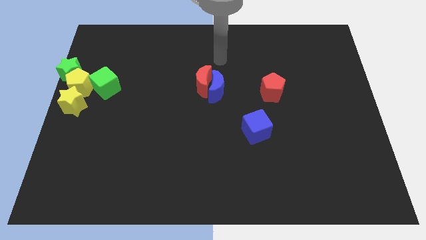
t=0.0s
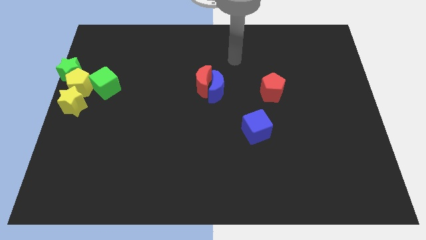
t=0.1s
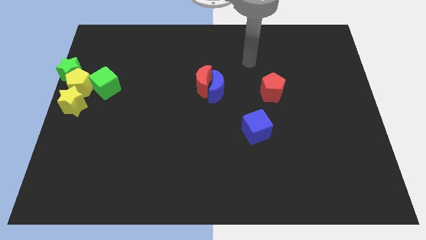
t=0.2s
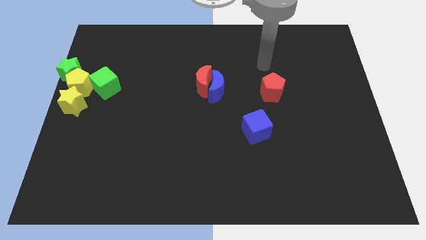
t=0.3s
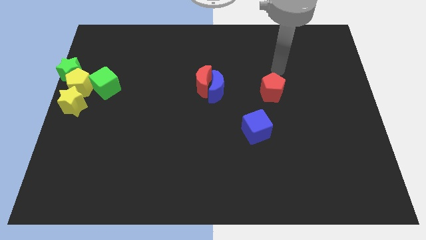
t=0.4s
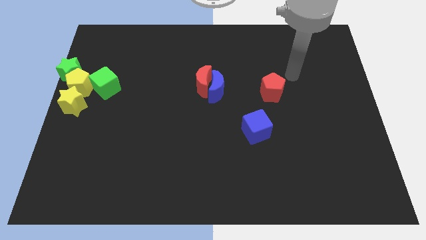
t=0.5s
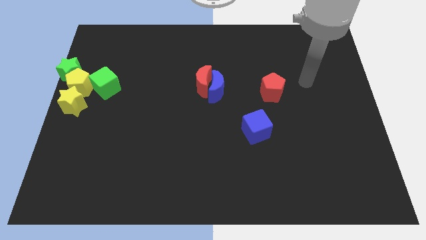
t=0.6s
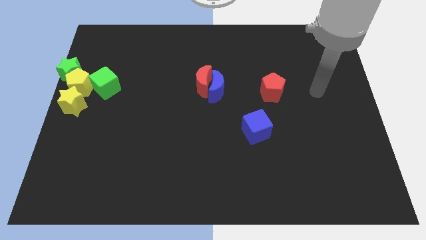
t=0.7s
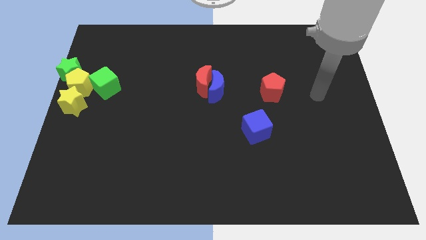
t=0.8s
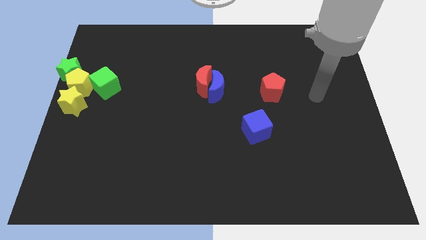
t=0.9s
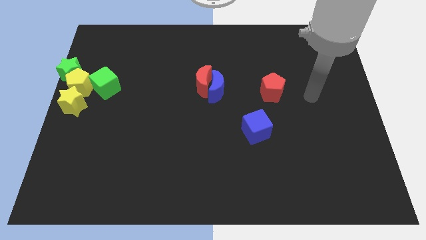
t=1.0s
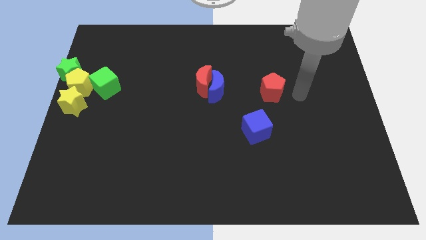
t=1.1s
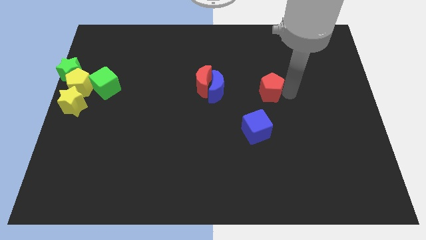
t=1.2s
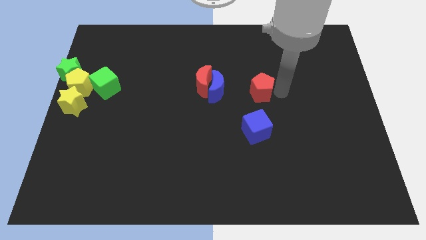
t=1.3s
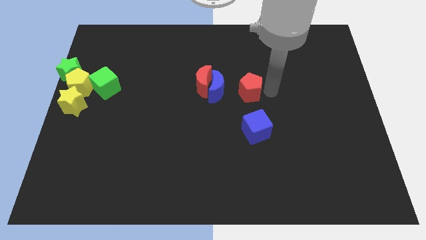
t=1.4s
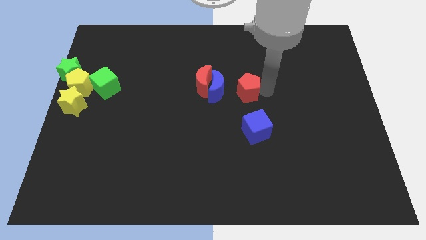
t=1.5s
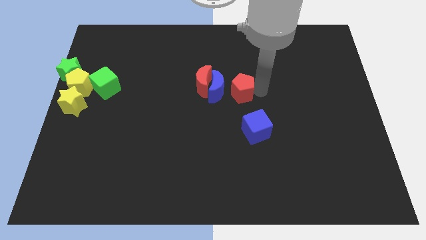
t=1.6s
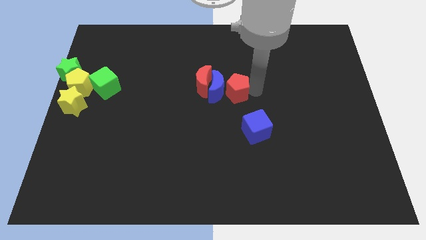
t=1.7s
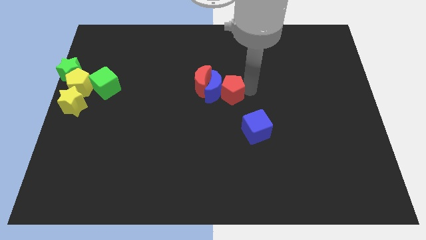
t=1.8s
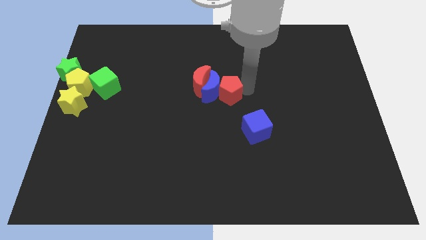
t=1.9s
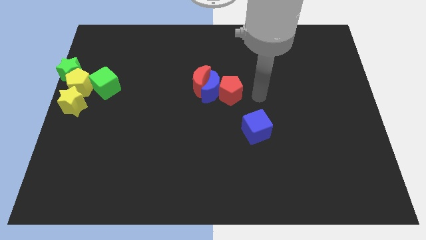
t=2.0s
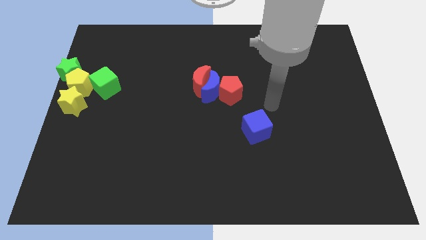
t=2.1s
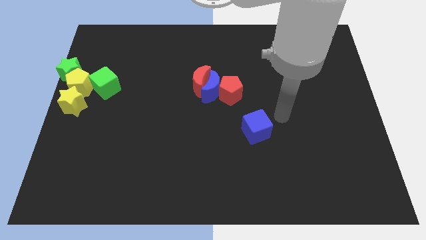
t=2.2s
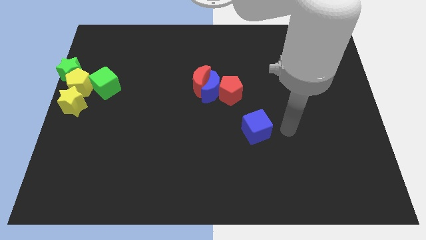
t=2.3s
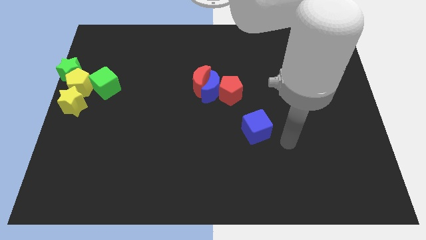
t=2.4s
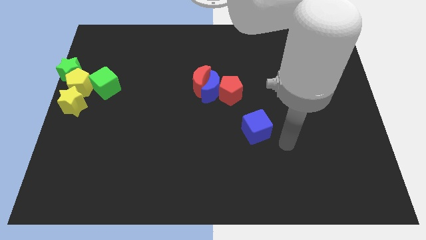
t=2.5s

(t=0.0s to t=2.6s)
move red pentagon right beside blue moon

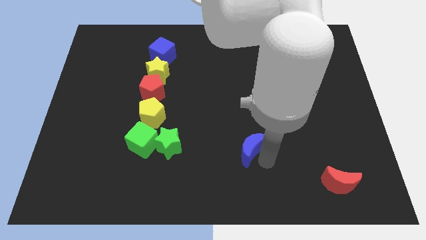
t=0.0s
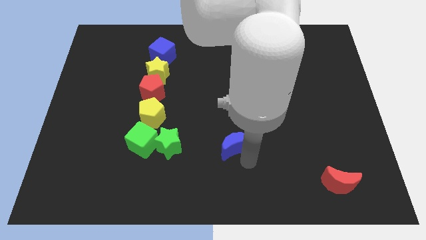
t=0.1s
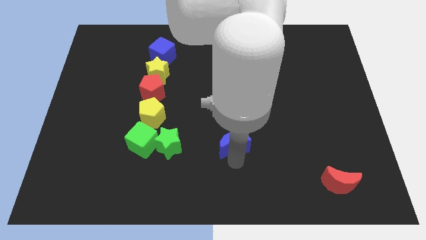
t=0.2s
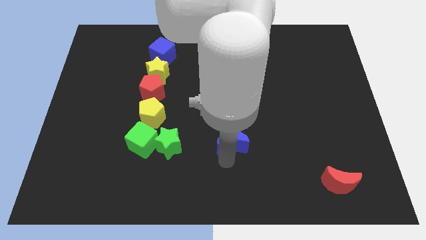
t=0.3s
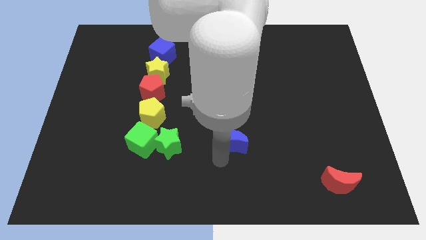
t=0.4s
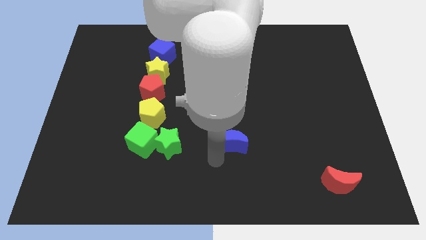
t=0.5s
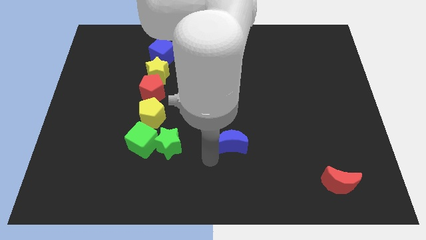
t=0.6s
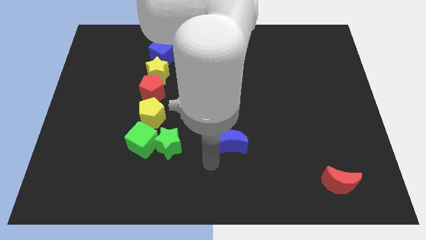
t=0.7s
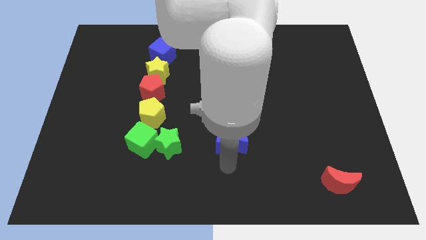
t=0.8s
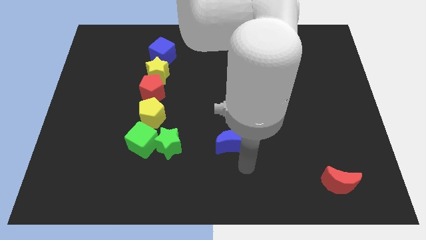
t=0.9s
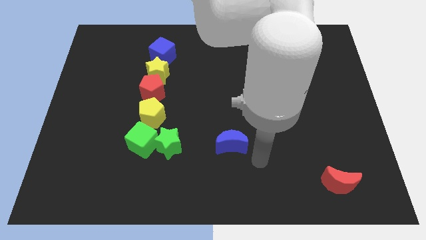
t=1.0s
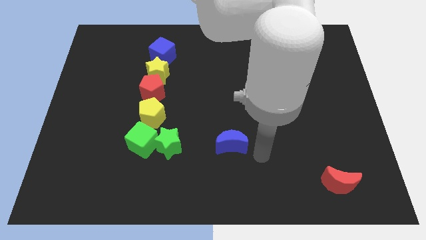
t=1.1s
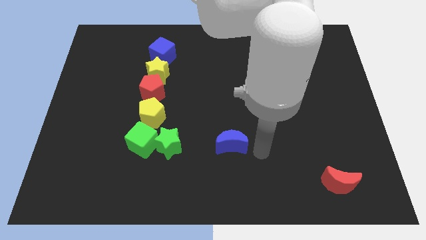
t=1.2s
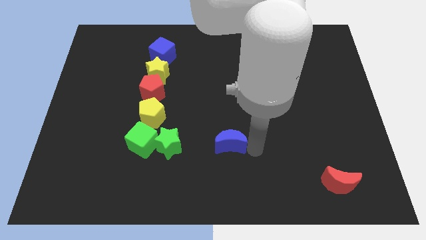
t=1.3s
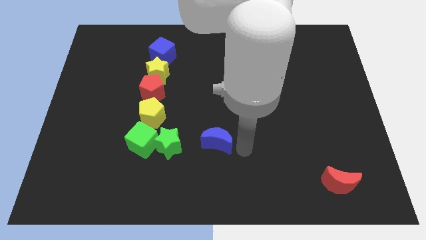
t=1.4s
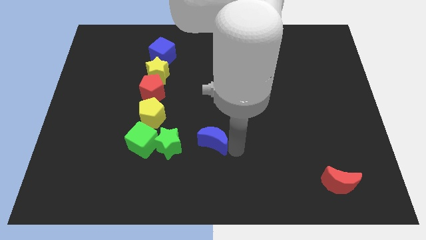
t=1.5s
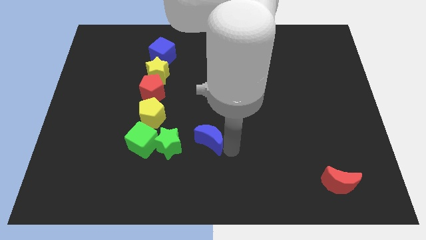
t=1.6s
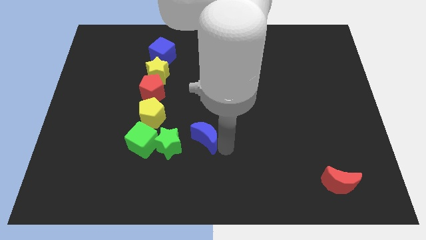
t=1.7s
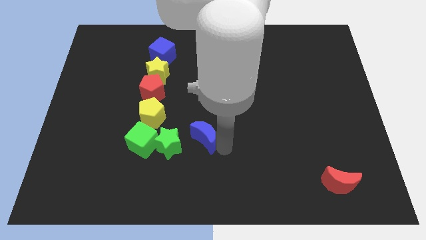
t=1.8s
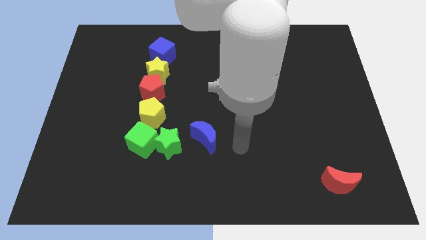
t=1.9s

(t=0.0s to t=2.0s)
move the blue moon diagonally top right to the green star

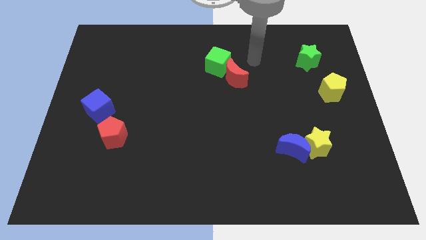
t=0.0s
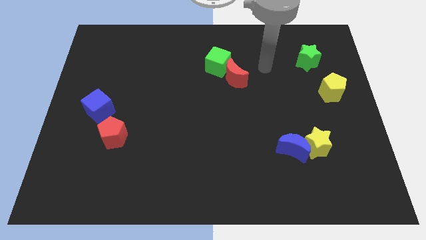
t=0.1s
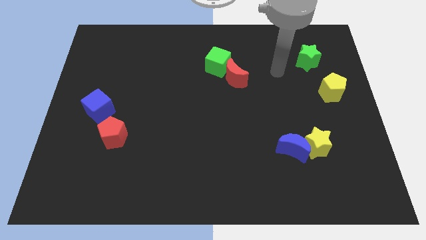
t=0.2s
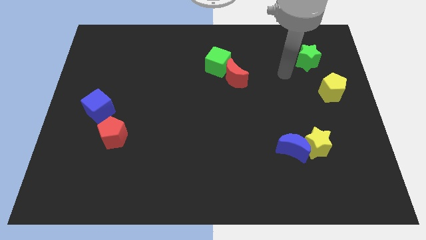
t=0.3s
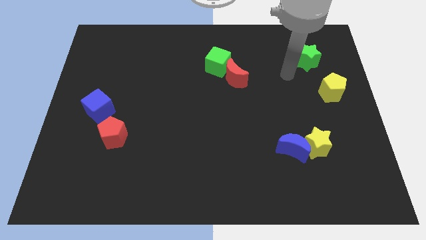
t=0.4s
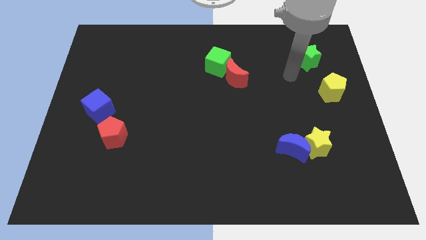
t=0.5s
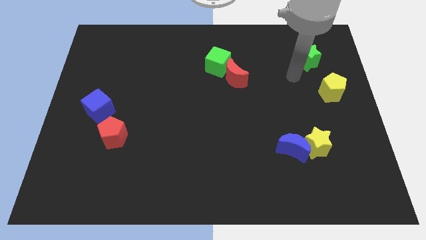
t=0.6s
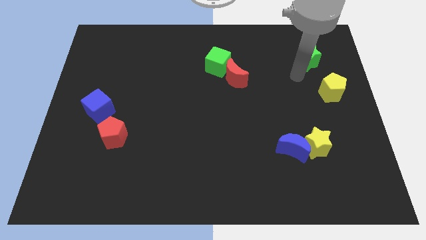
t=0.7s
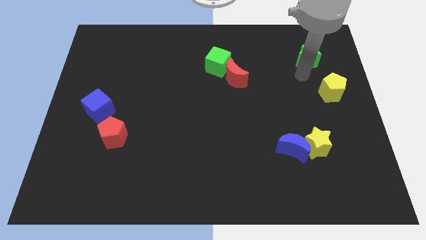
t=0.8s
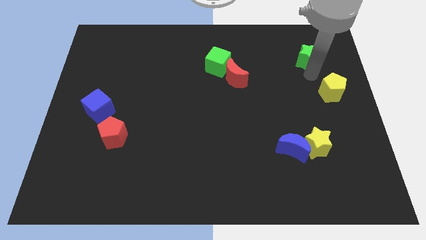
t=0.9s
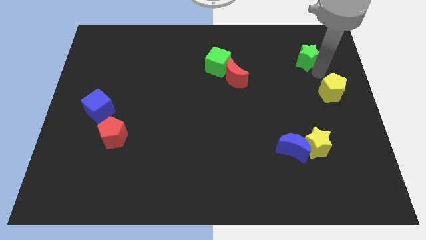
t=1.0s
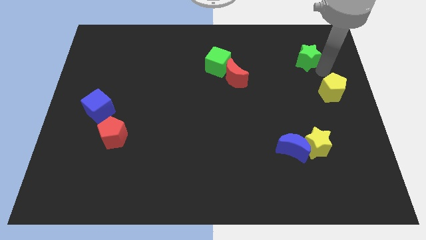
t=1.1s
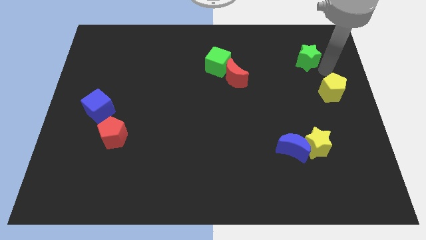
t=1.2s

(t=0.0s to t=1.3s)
go near the yellow pentagon

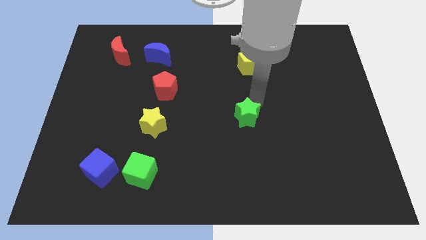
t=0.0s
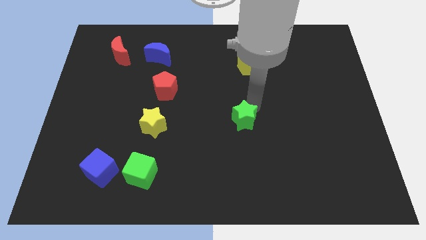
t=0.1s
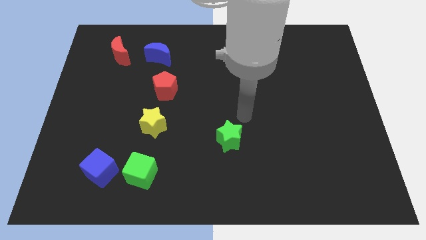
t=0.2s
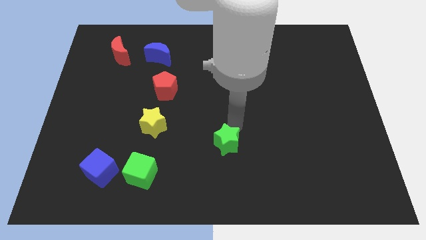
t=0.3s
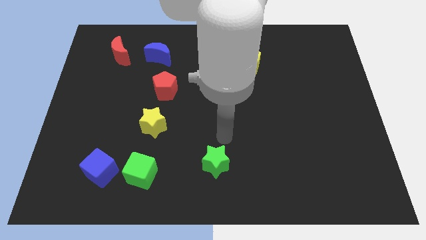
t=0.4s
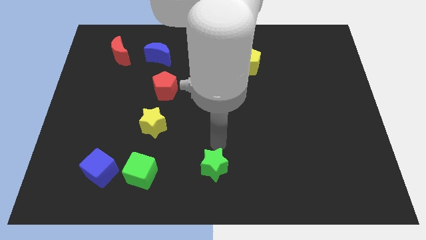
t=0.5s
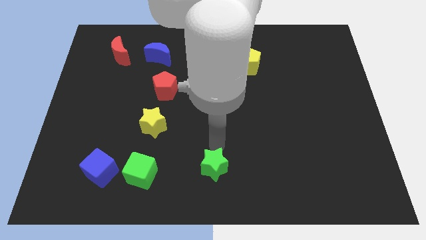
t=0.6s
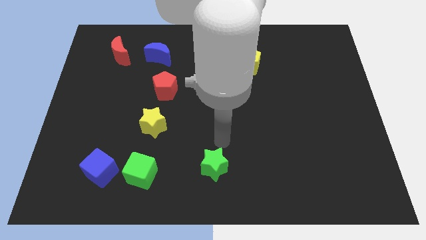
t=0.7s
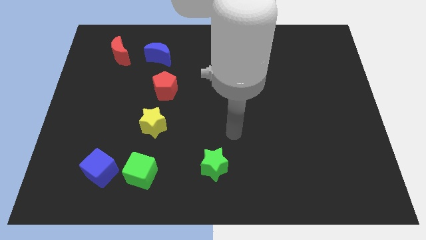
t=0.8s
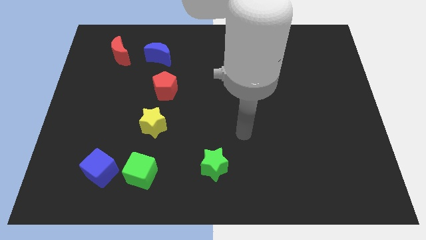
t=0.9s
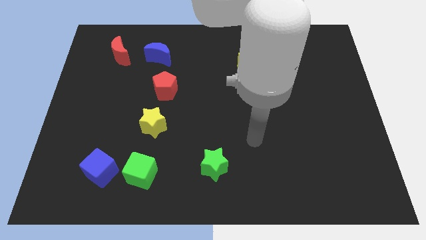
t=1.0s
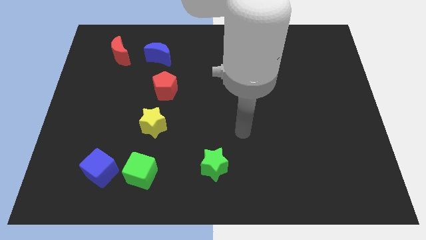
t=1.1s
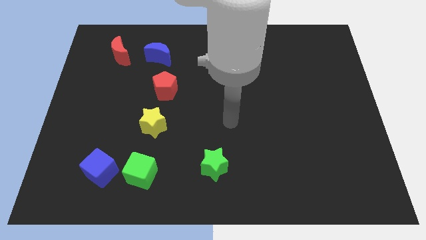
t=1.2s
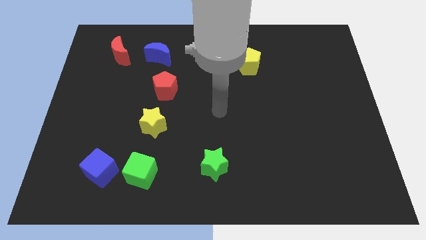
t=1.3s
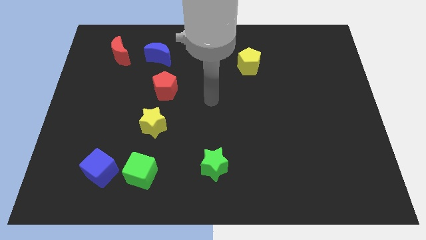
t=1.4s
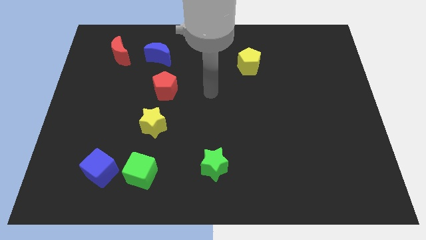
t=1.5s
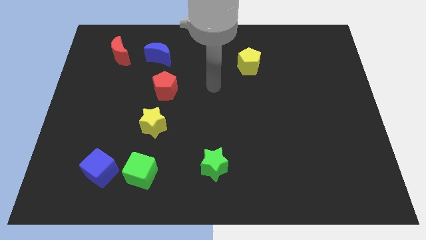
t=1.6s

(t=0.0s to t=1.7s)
drag the green star slightly down

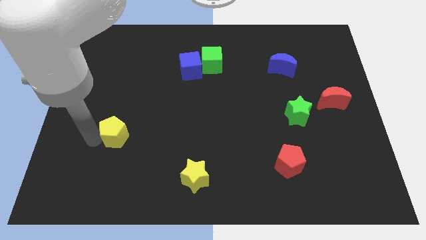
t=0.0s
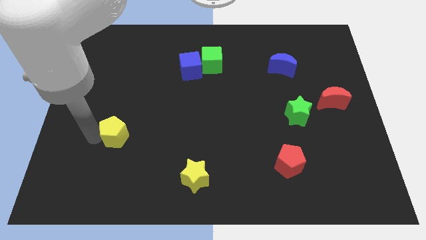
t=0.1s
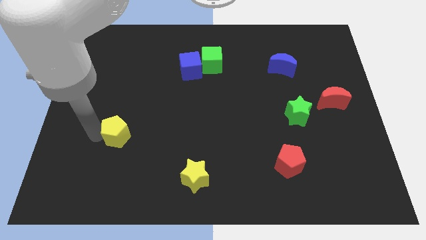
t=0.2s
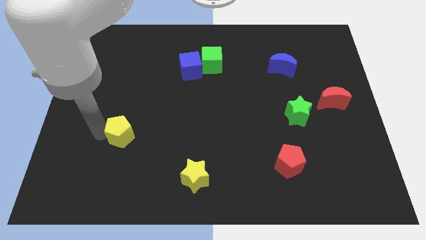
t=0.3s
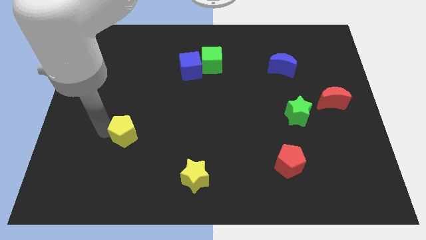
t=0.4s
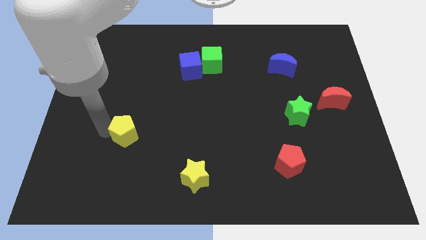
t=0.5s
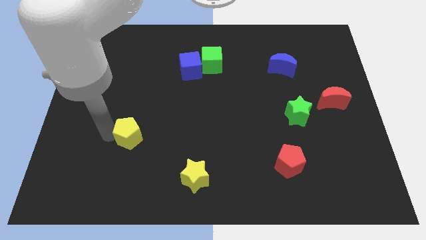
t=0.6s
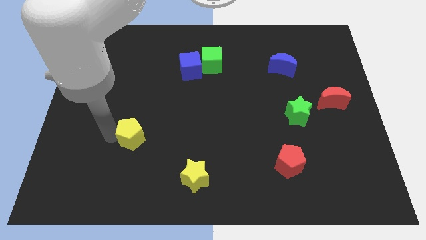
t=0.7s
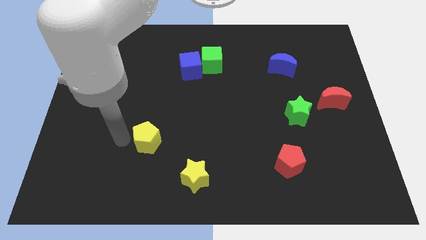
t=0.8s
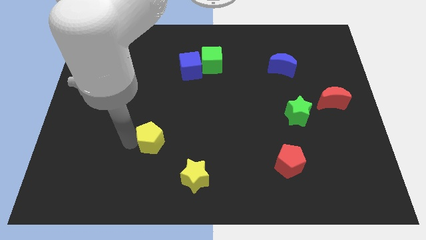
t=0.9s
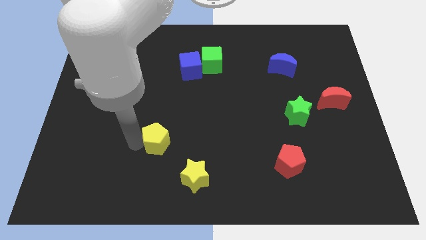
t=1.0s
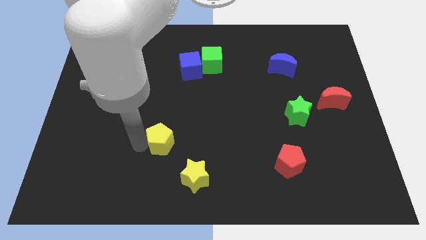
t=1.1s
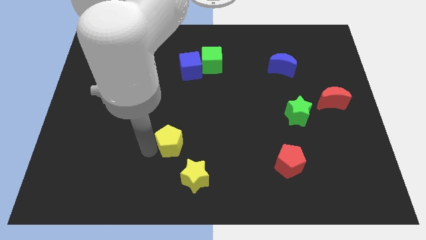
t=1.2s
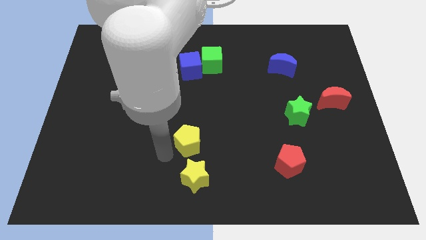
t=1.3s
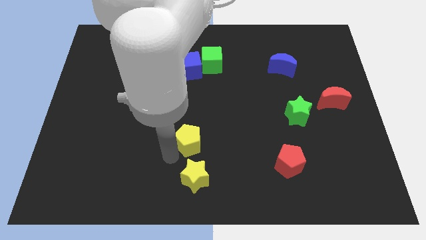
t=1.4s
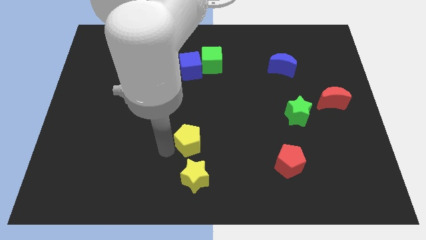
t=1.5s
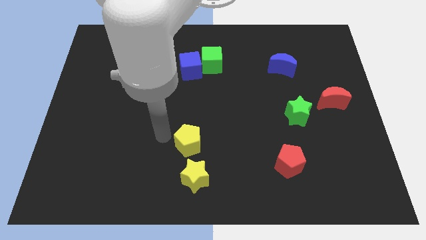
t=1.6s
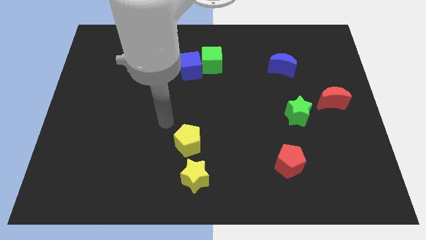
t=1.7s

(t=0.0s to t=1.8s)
place the yellow pentagon above the yellow star
